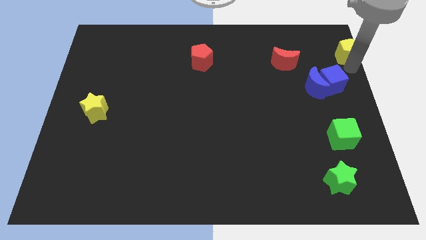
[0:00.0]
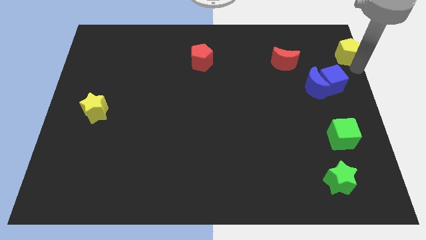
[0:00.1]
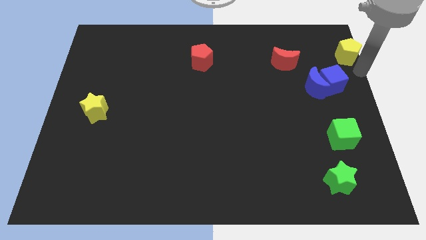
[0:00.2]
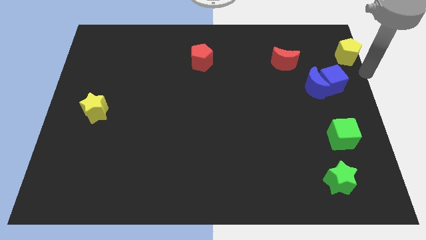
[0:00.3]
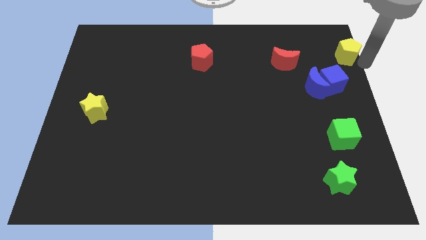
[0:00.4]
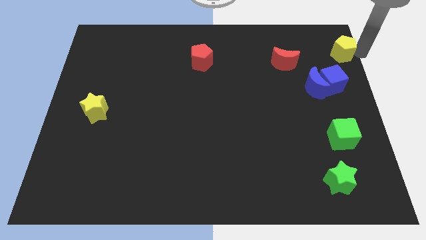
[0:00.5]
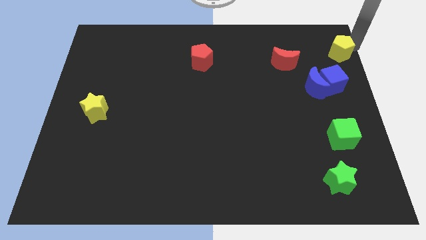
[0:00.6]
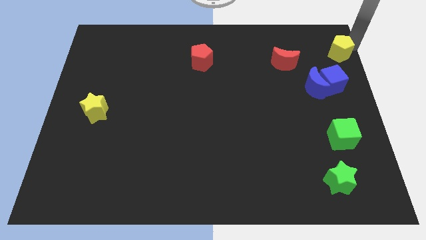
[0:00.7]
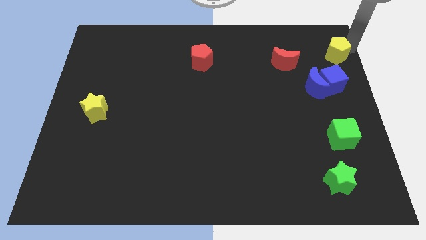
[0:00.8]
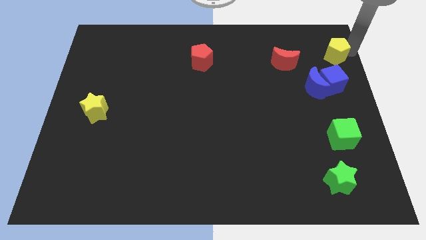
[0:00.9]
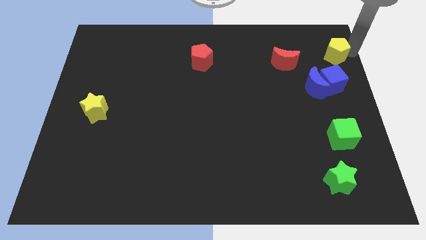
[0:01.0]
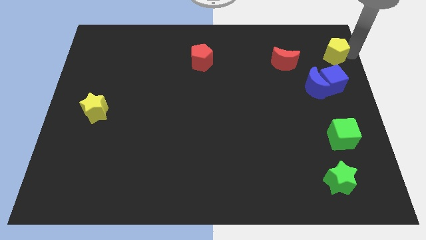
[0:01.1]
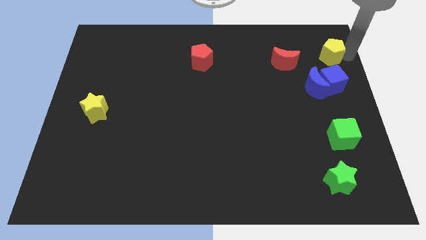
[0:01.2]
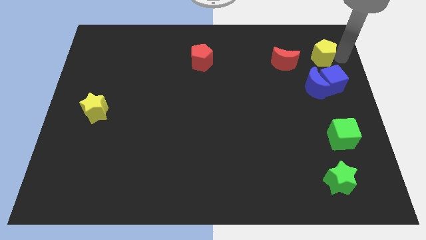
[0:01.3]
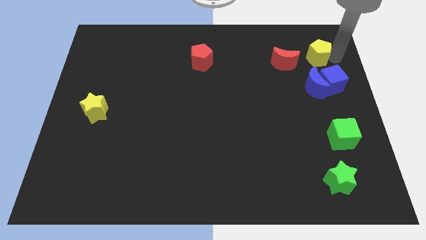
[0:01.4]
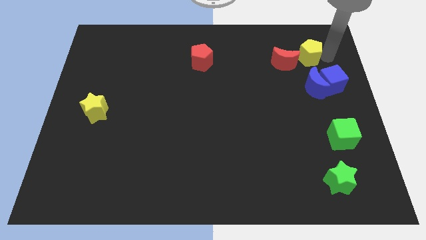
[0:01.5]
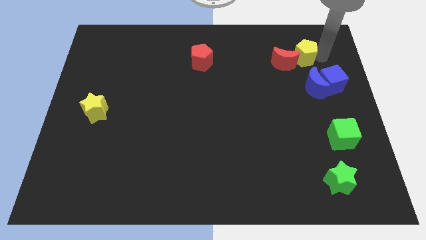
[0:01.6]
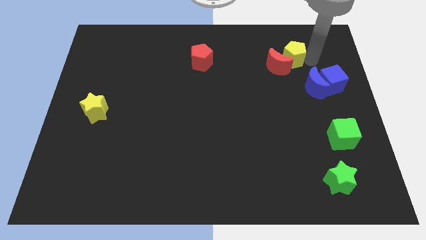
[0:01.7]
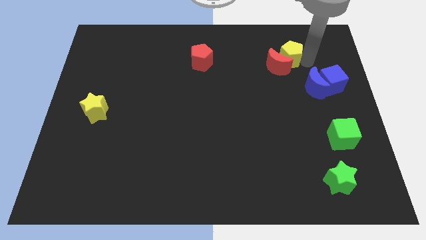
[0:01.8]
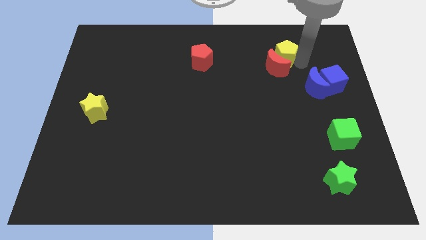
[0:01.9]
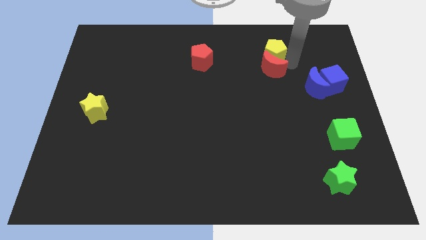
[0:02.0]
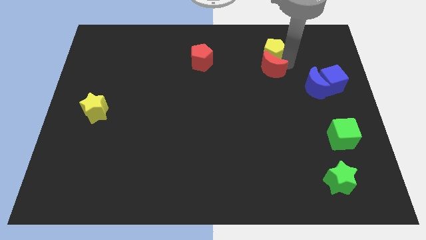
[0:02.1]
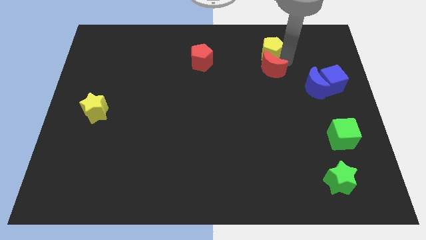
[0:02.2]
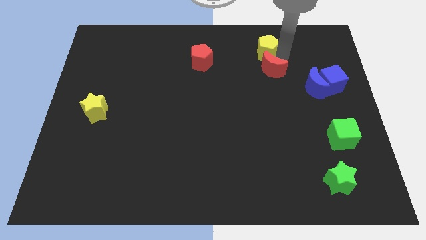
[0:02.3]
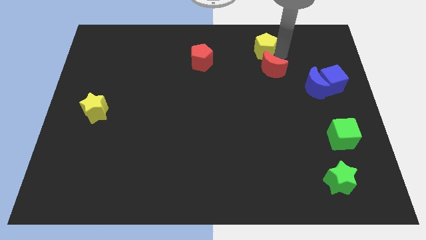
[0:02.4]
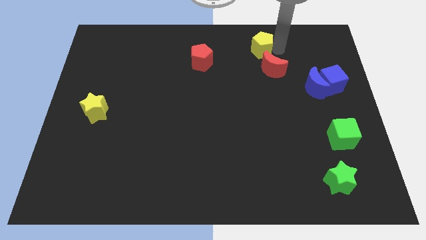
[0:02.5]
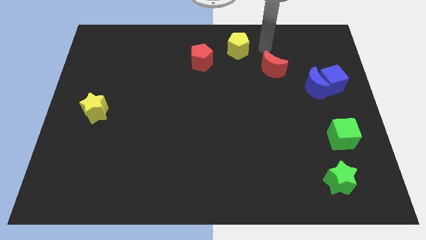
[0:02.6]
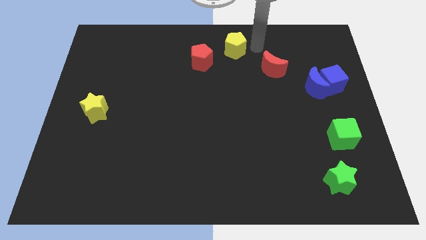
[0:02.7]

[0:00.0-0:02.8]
push the yellow pentagon to the top left of the red crescent

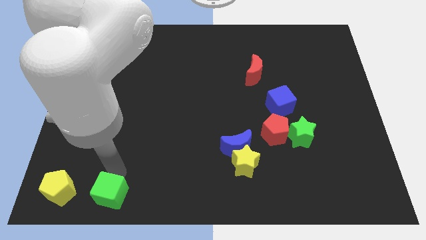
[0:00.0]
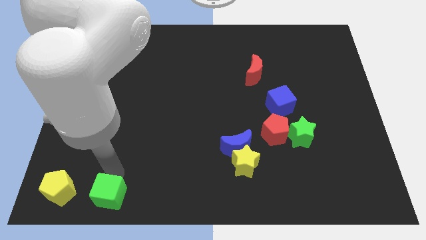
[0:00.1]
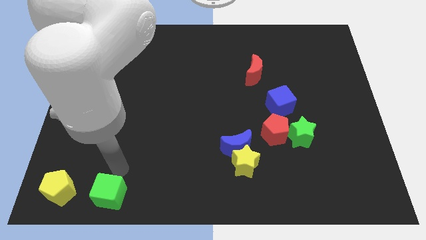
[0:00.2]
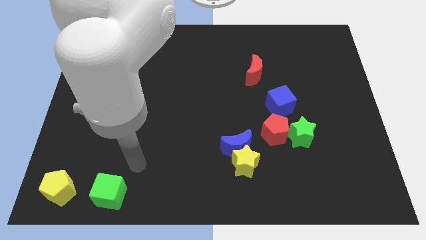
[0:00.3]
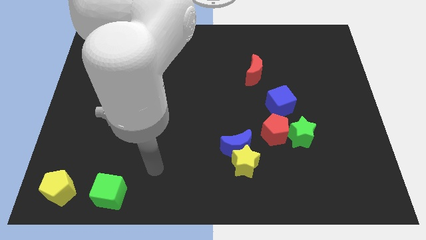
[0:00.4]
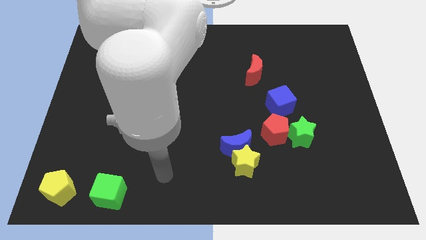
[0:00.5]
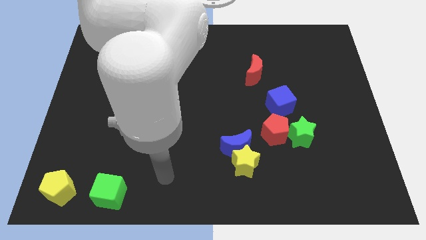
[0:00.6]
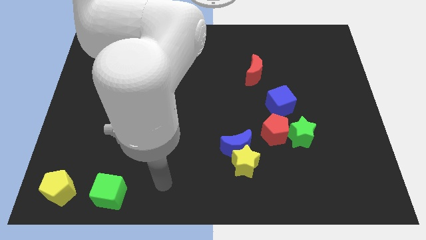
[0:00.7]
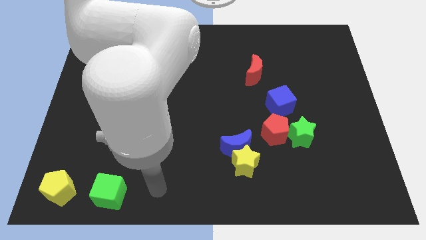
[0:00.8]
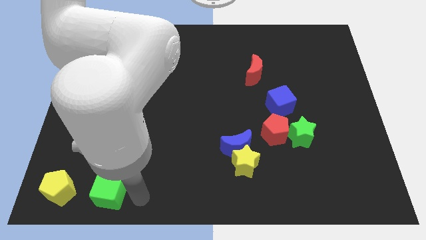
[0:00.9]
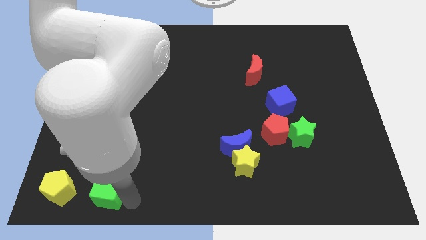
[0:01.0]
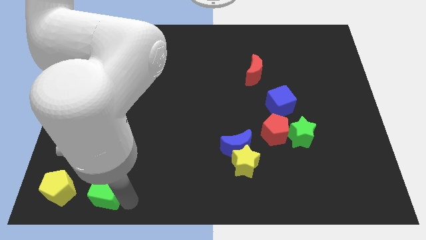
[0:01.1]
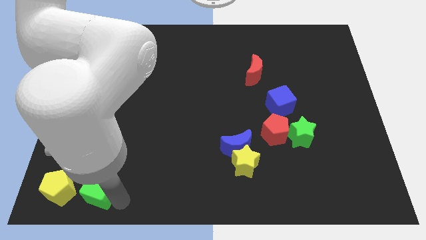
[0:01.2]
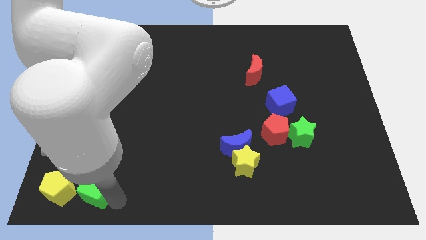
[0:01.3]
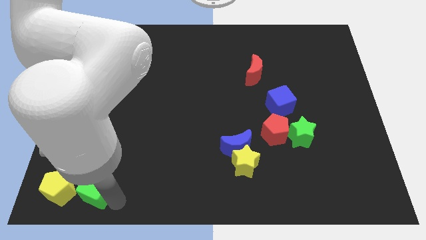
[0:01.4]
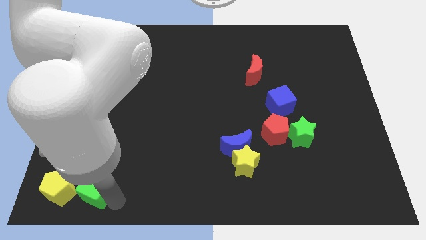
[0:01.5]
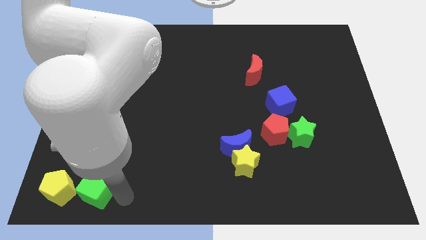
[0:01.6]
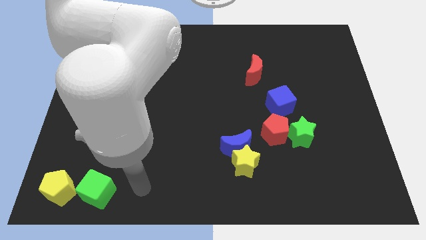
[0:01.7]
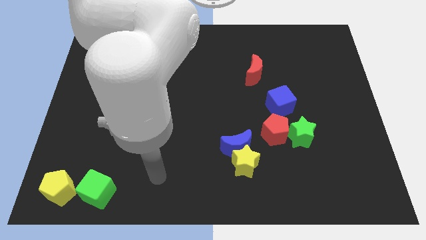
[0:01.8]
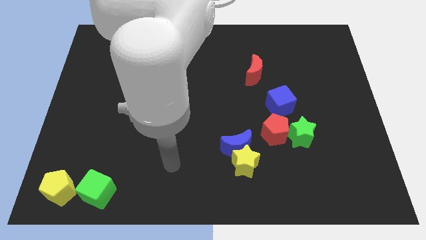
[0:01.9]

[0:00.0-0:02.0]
push the green cube right of yellow pentagon

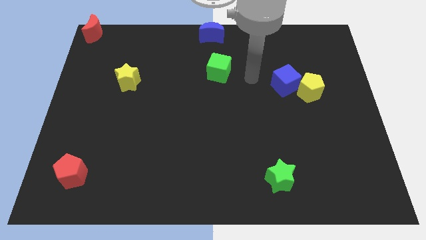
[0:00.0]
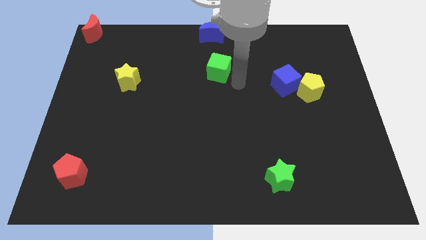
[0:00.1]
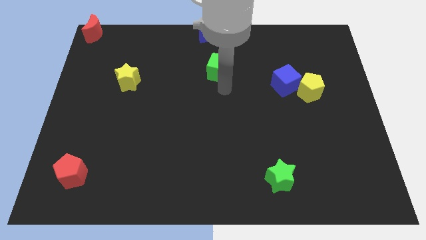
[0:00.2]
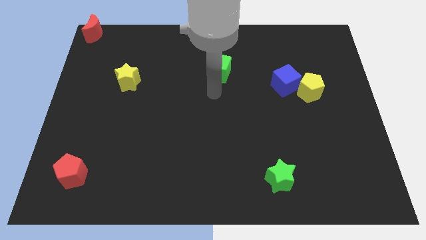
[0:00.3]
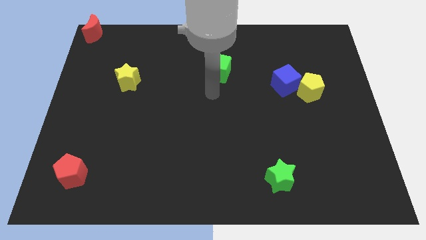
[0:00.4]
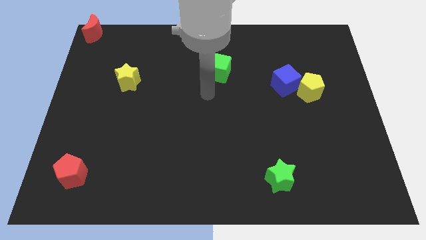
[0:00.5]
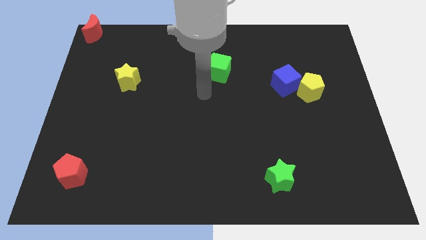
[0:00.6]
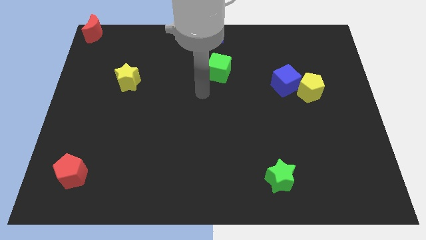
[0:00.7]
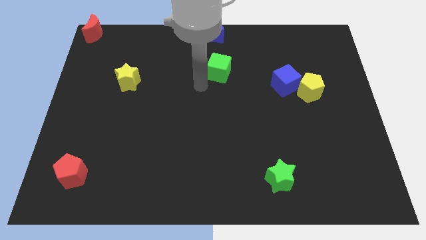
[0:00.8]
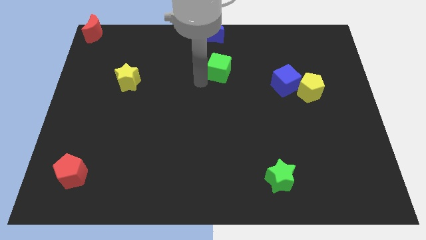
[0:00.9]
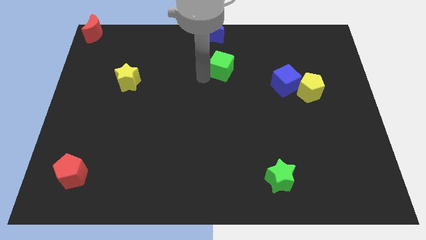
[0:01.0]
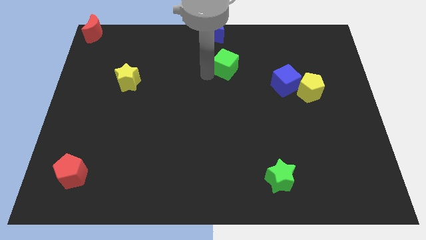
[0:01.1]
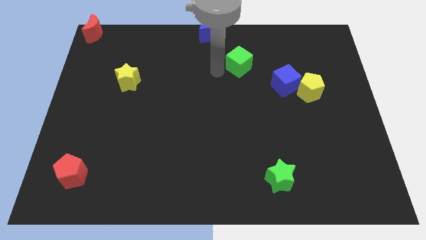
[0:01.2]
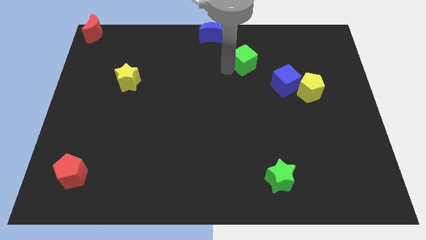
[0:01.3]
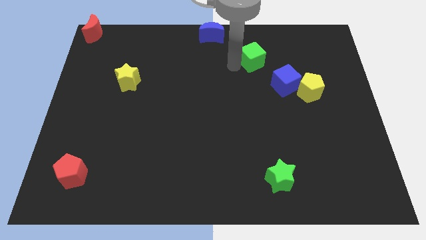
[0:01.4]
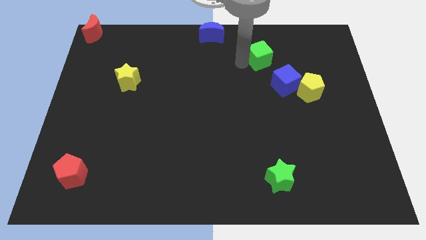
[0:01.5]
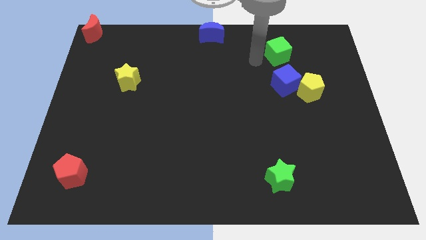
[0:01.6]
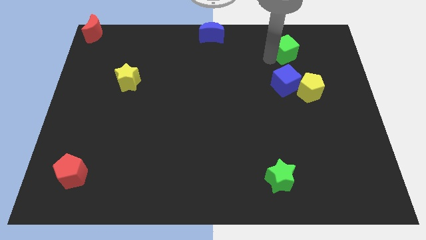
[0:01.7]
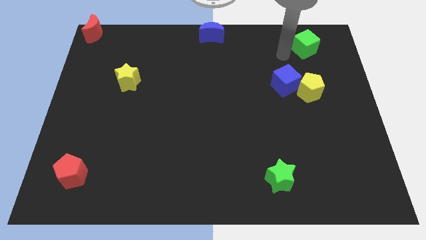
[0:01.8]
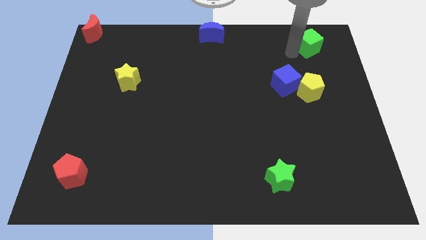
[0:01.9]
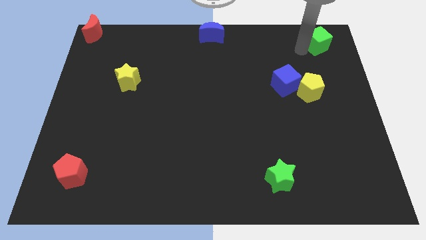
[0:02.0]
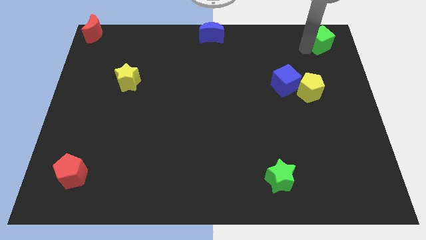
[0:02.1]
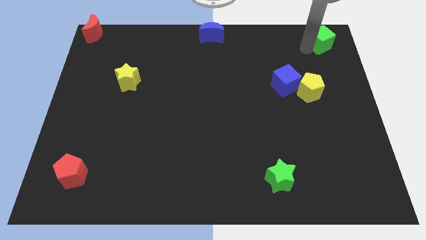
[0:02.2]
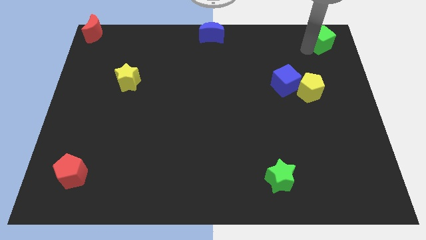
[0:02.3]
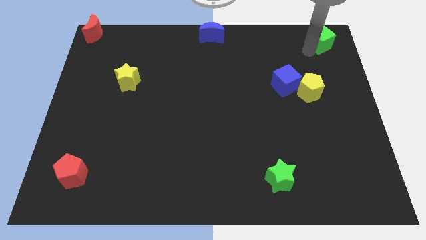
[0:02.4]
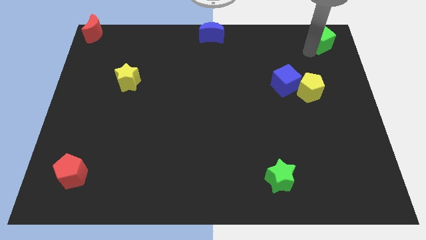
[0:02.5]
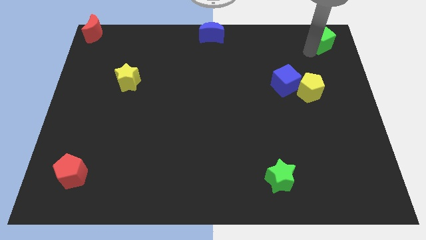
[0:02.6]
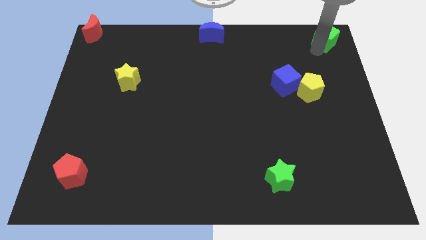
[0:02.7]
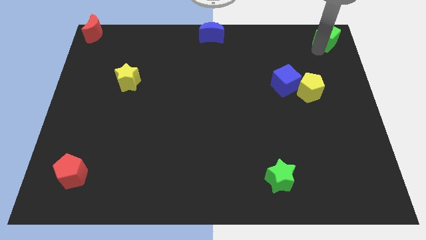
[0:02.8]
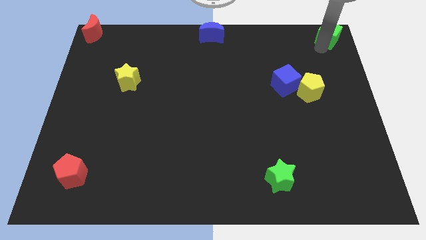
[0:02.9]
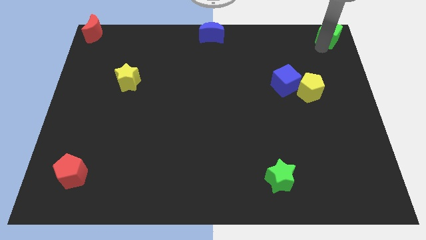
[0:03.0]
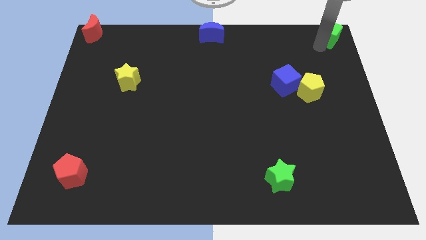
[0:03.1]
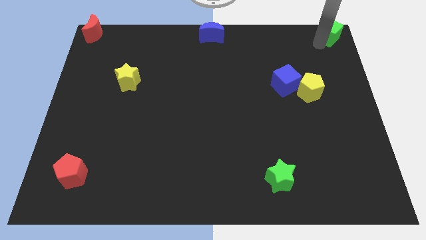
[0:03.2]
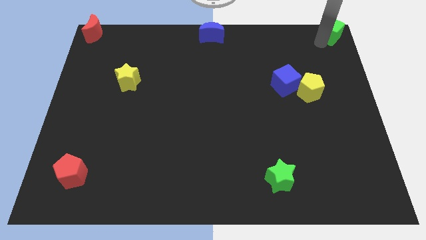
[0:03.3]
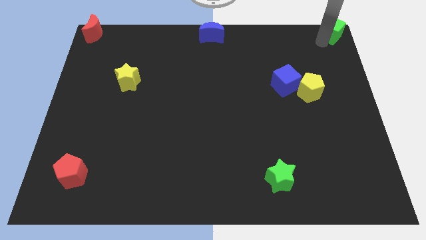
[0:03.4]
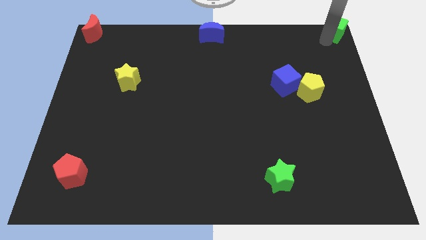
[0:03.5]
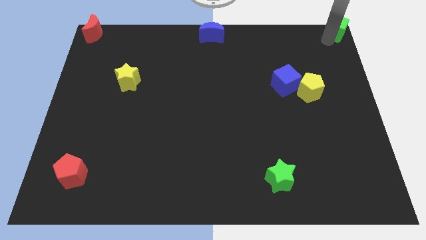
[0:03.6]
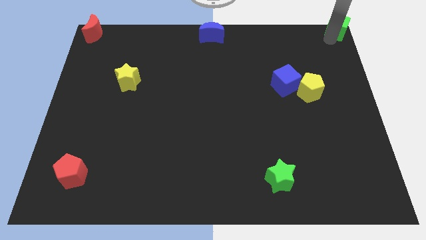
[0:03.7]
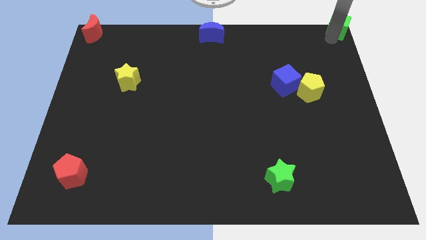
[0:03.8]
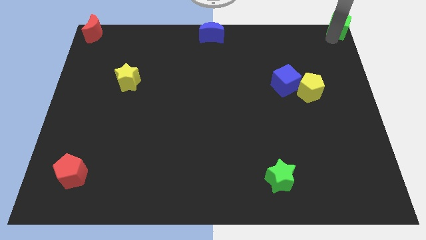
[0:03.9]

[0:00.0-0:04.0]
drag the green cube to the top right corner of the board

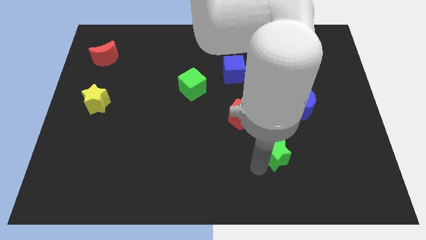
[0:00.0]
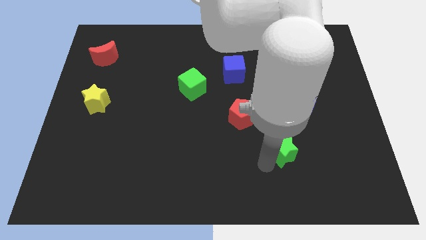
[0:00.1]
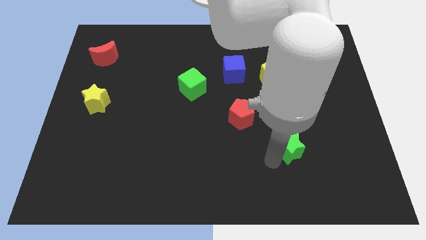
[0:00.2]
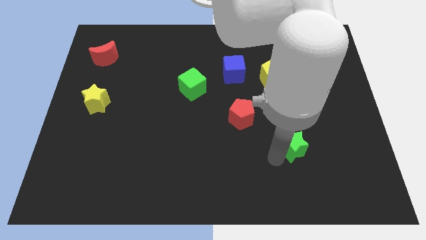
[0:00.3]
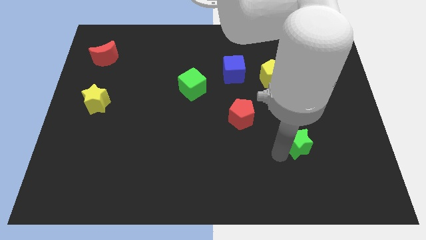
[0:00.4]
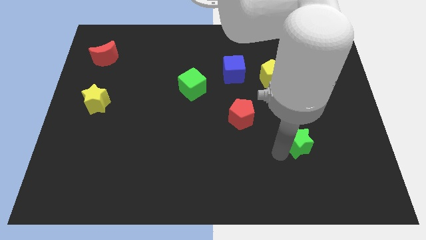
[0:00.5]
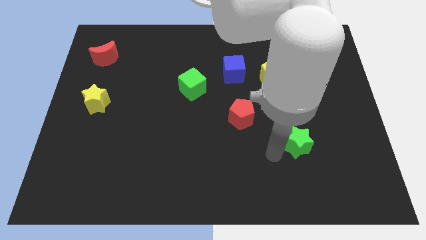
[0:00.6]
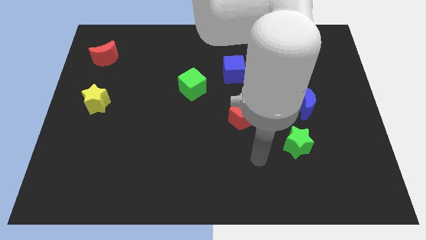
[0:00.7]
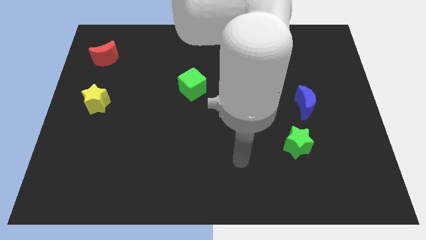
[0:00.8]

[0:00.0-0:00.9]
place the green star at the bottom of blue cube
